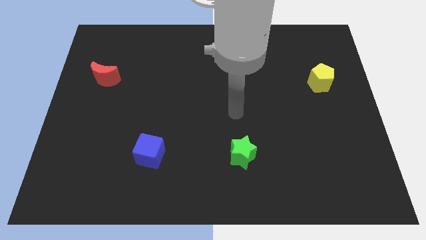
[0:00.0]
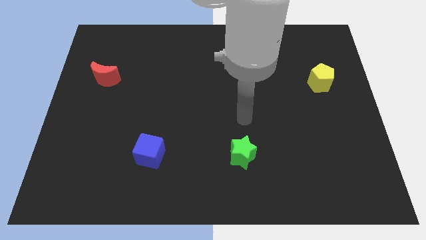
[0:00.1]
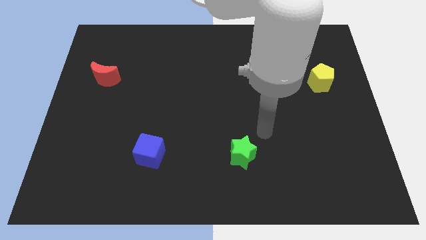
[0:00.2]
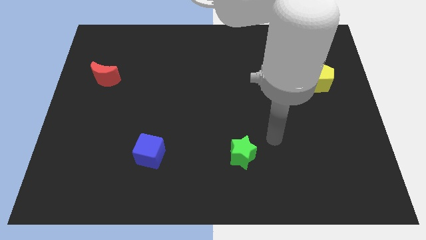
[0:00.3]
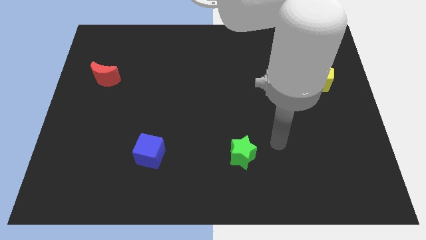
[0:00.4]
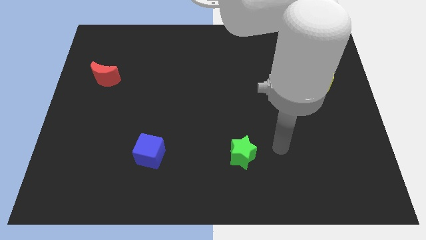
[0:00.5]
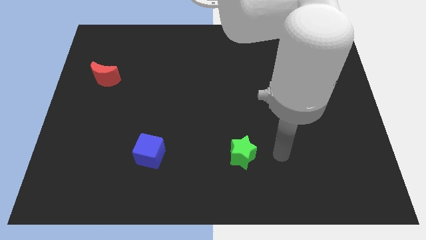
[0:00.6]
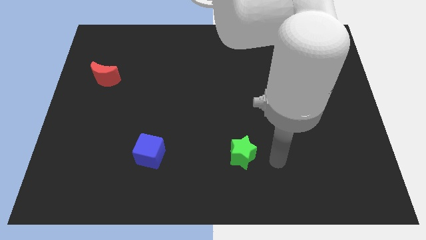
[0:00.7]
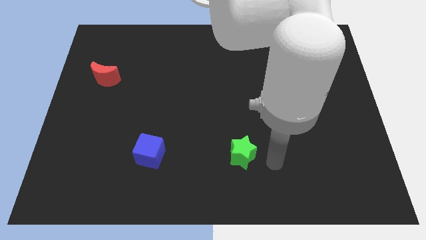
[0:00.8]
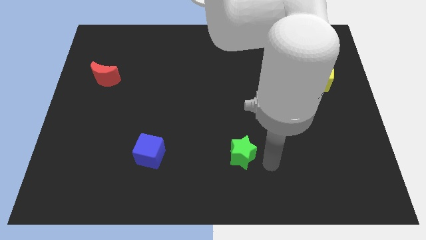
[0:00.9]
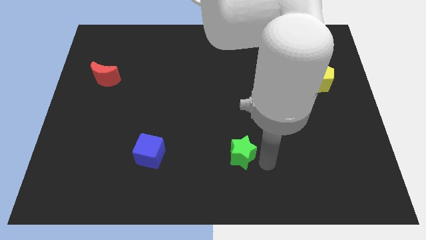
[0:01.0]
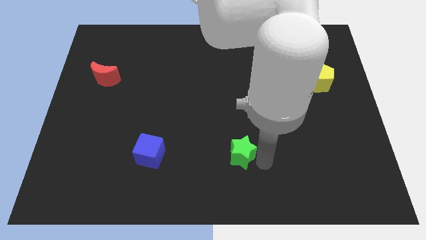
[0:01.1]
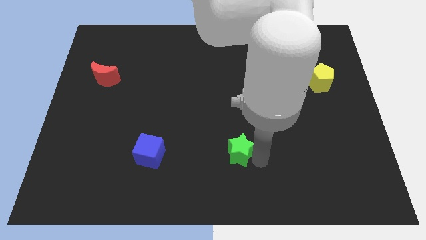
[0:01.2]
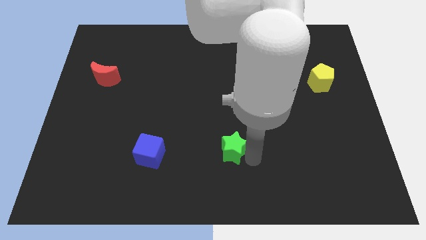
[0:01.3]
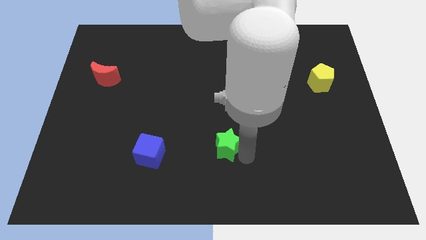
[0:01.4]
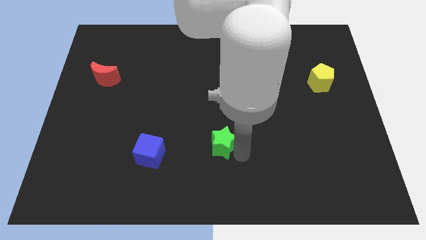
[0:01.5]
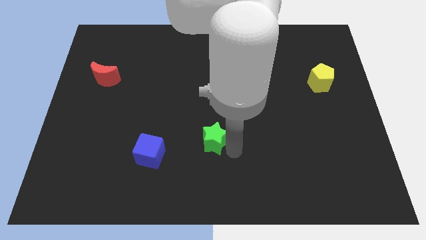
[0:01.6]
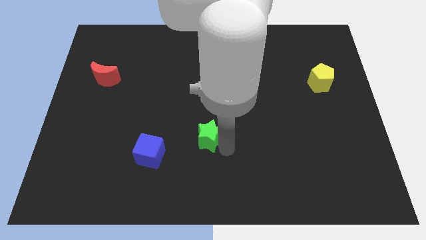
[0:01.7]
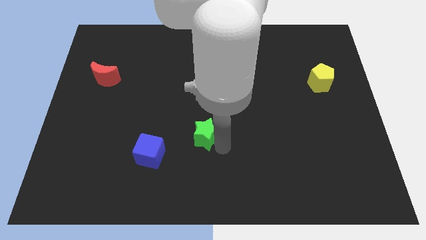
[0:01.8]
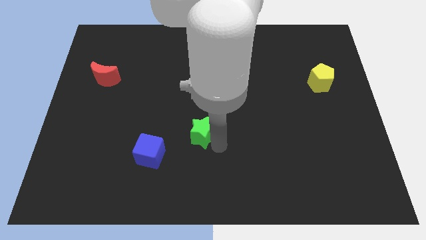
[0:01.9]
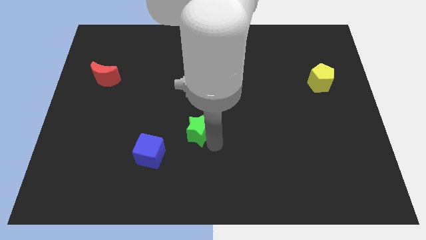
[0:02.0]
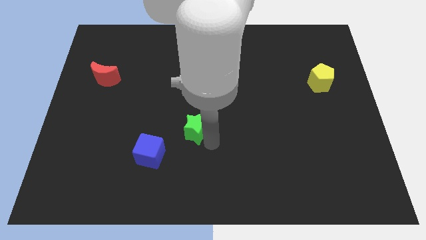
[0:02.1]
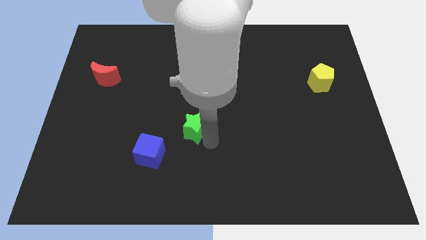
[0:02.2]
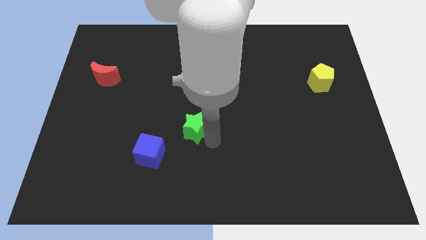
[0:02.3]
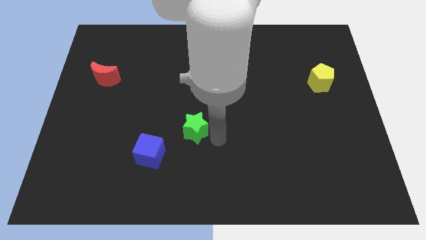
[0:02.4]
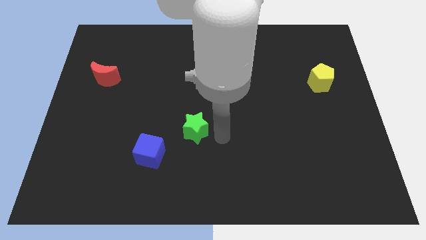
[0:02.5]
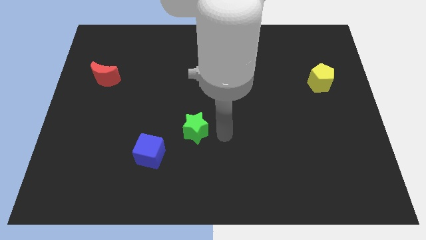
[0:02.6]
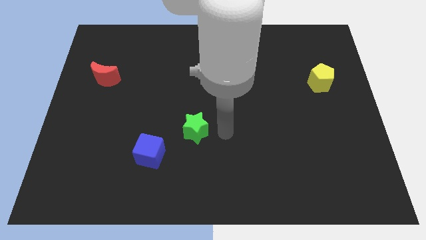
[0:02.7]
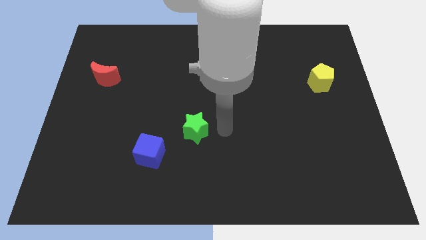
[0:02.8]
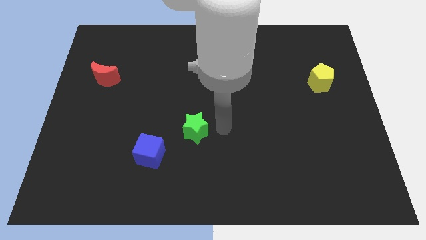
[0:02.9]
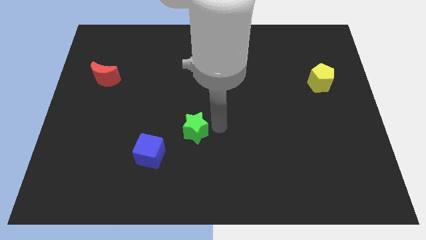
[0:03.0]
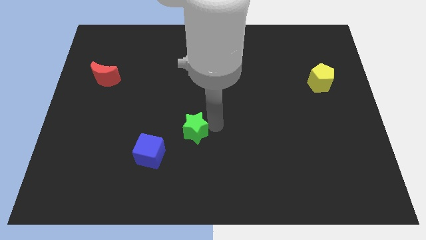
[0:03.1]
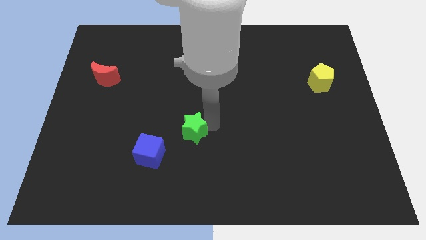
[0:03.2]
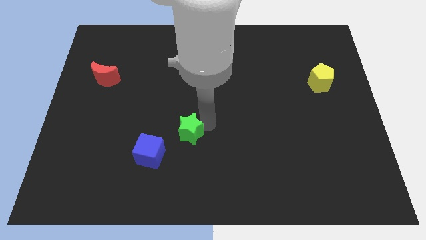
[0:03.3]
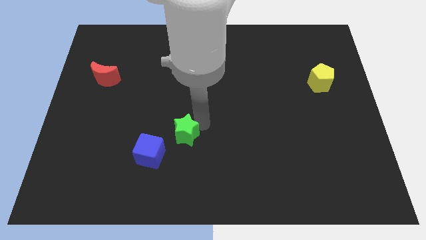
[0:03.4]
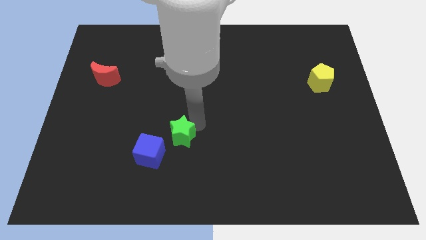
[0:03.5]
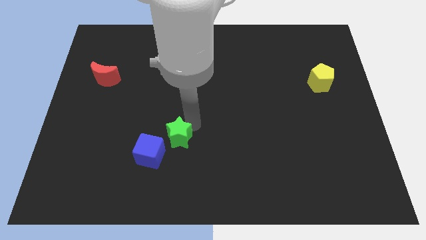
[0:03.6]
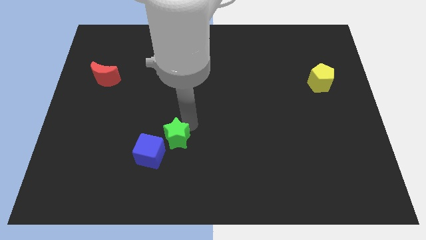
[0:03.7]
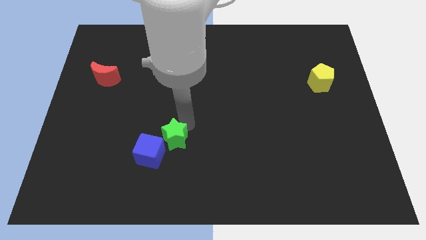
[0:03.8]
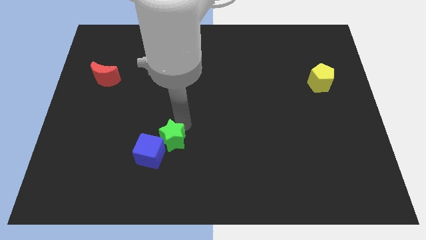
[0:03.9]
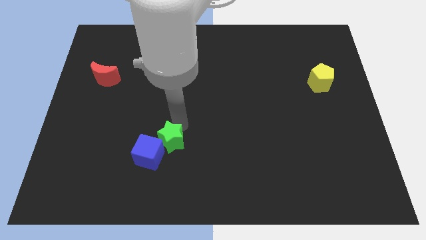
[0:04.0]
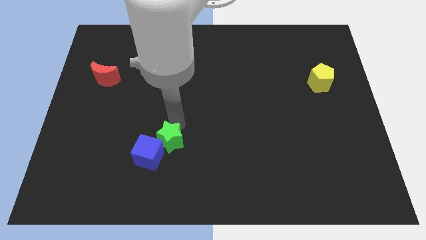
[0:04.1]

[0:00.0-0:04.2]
slide the green star next to the blue cube

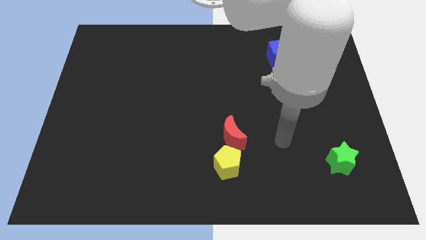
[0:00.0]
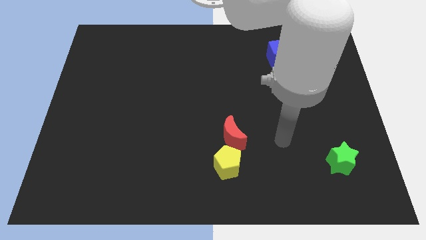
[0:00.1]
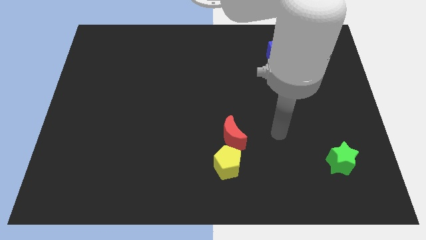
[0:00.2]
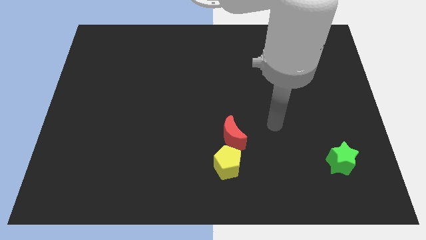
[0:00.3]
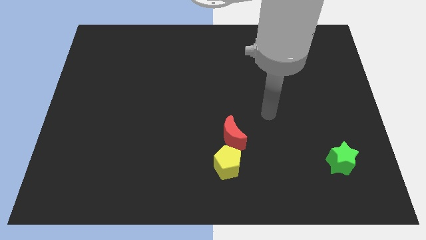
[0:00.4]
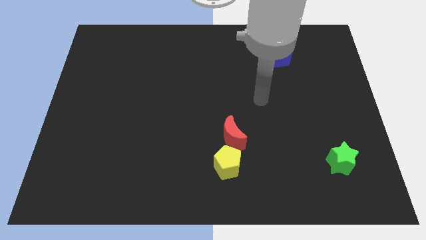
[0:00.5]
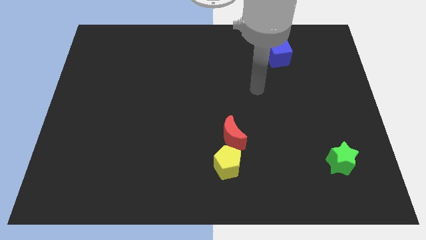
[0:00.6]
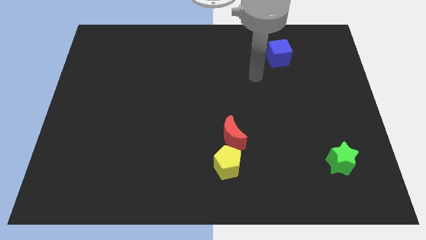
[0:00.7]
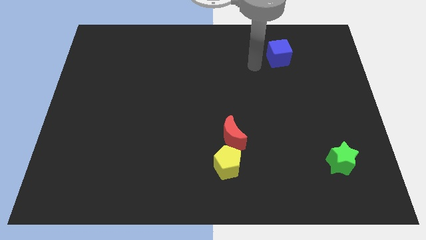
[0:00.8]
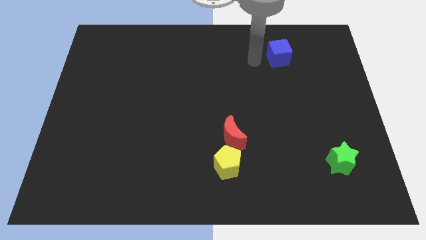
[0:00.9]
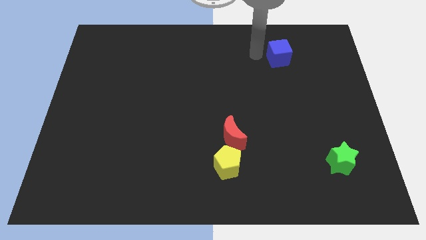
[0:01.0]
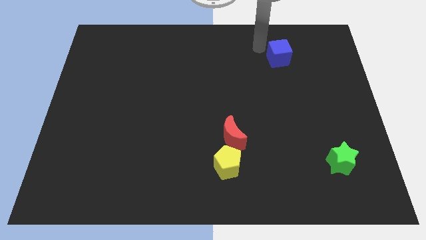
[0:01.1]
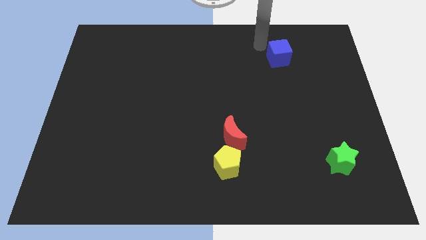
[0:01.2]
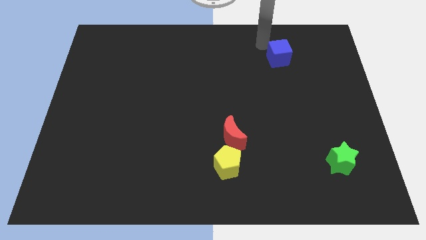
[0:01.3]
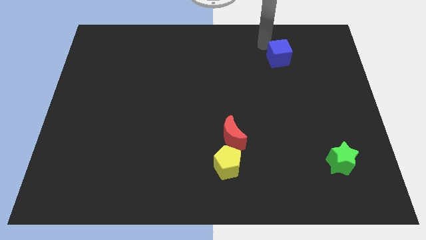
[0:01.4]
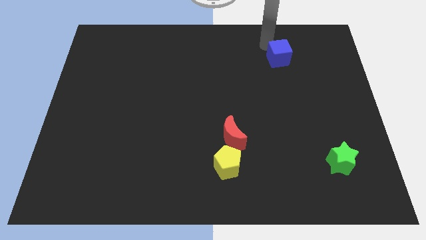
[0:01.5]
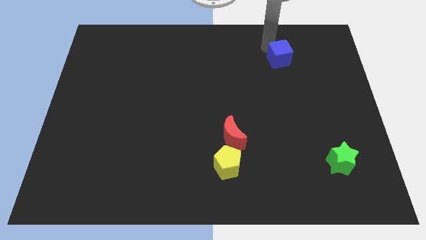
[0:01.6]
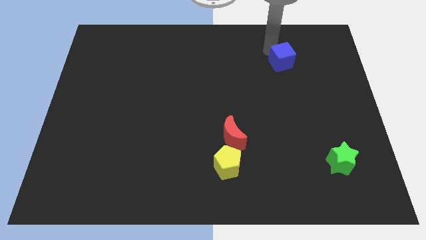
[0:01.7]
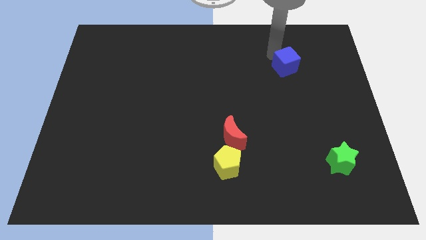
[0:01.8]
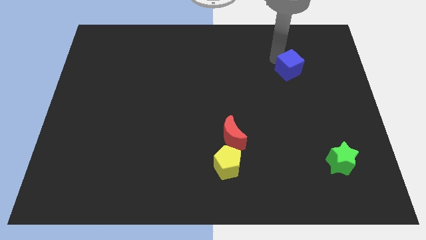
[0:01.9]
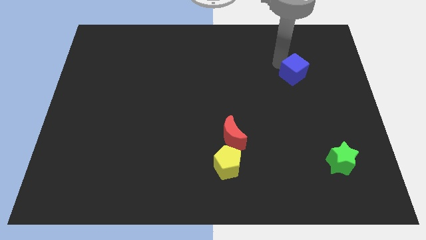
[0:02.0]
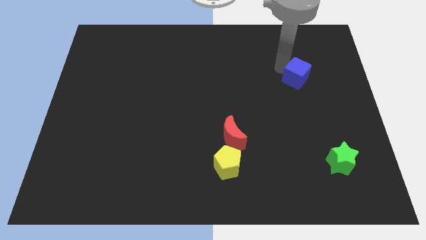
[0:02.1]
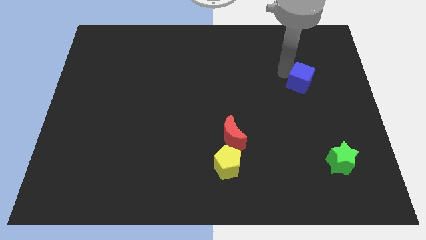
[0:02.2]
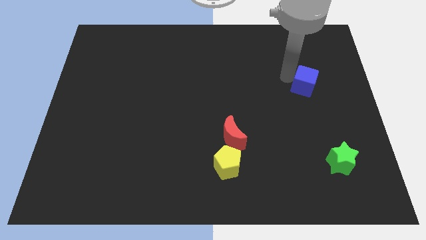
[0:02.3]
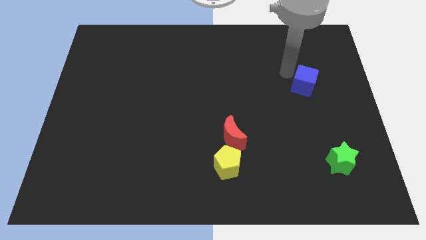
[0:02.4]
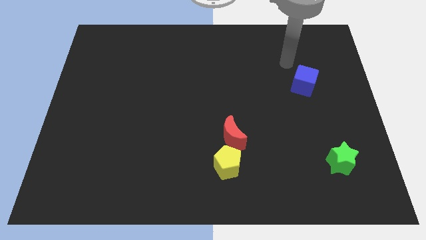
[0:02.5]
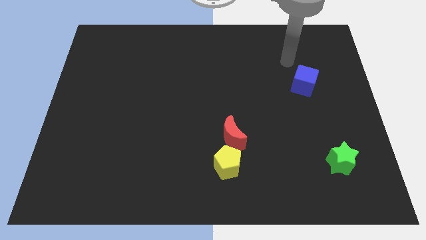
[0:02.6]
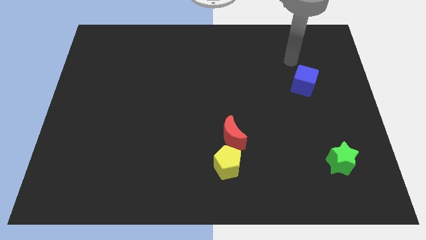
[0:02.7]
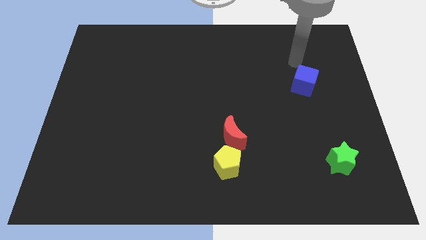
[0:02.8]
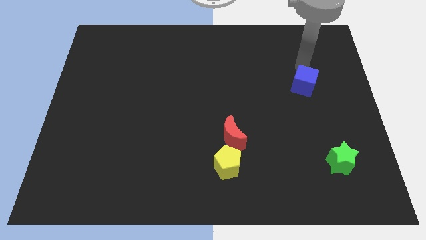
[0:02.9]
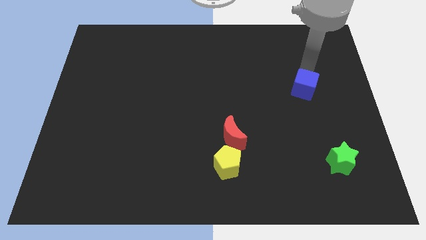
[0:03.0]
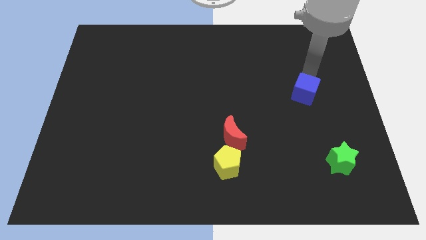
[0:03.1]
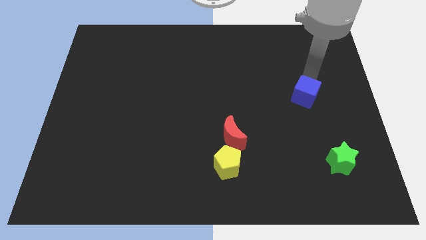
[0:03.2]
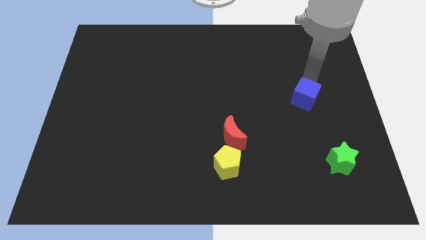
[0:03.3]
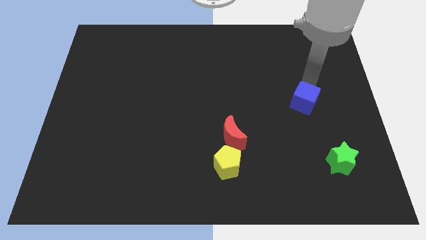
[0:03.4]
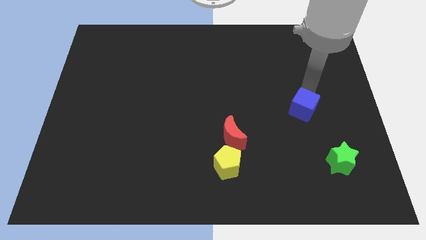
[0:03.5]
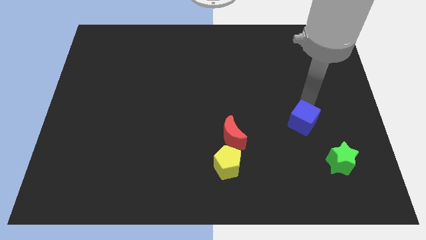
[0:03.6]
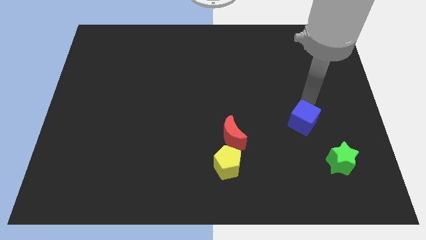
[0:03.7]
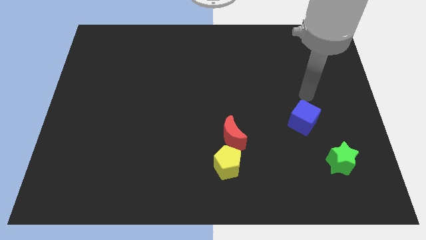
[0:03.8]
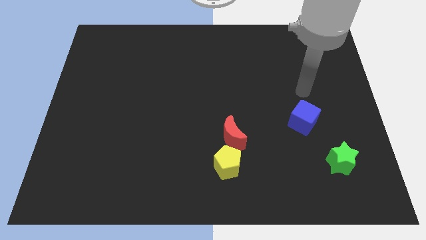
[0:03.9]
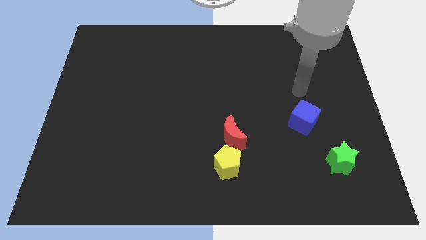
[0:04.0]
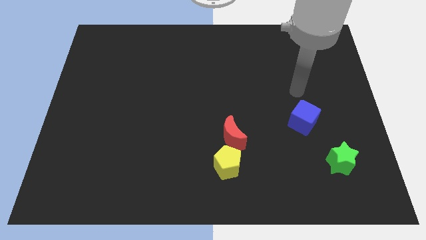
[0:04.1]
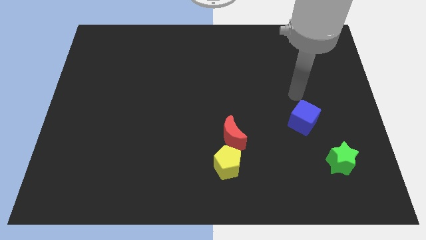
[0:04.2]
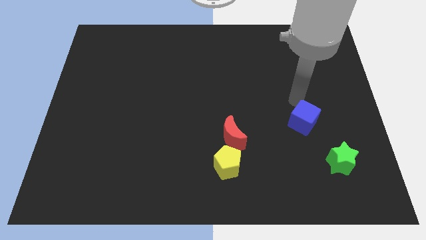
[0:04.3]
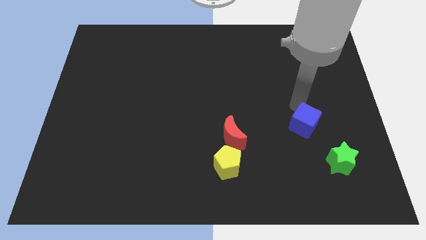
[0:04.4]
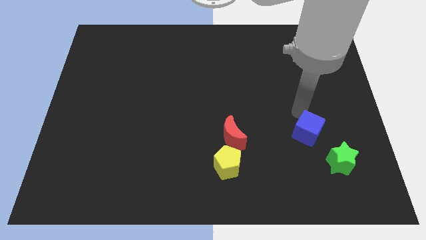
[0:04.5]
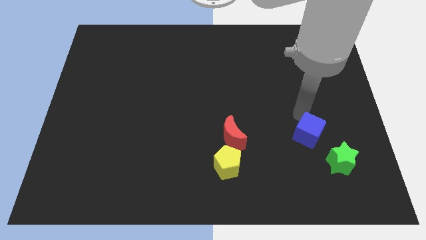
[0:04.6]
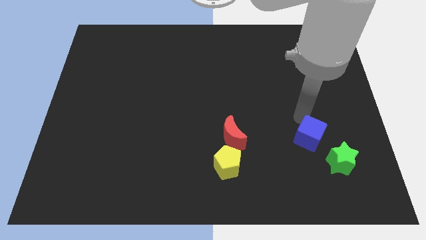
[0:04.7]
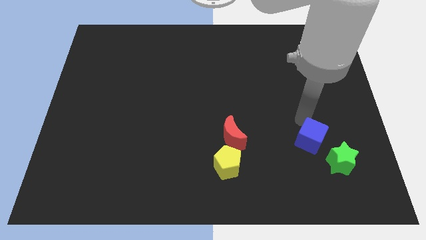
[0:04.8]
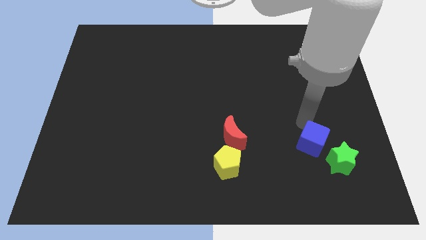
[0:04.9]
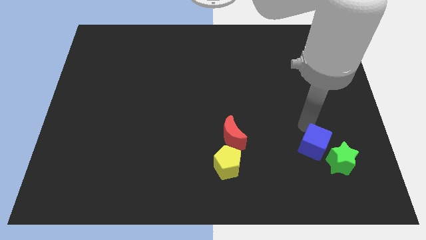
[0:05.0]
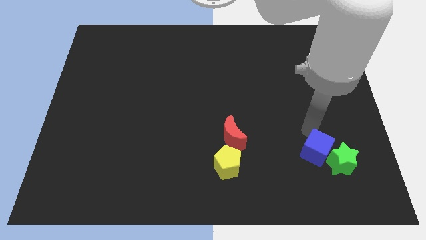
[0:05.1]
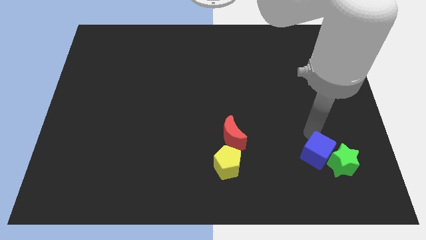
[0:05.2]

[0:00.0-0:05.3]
slide the blue cube towards the green block
